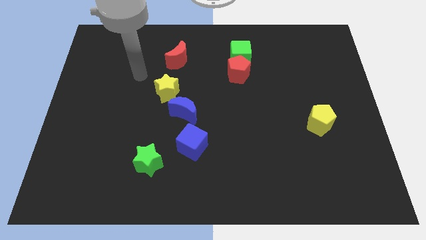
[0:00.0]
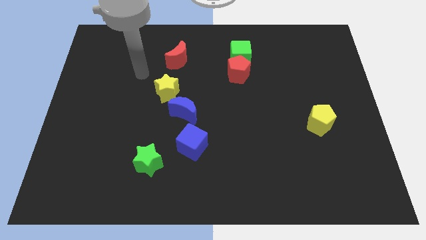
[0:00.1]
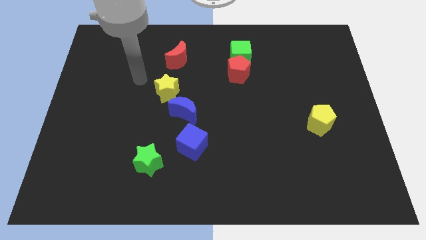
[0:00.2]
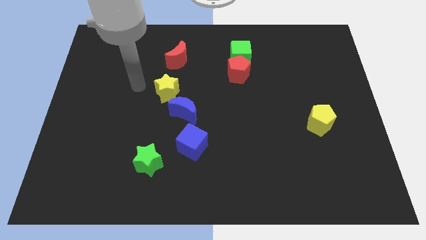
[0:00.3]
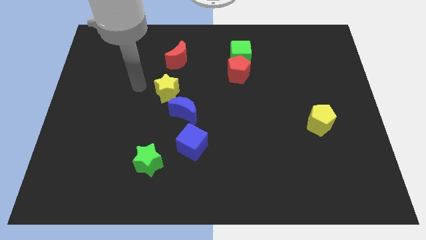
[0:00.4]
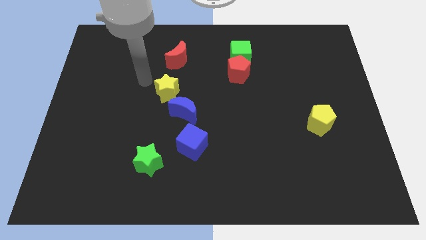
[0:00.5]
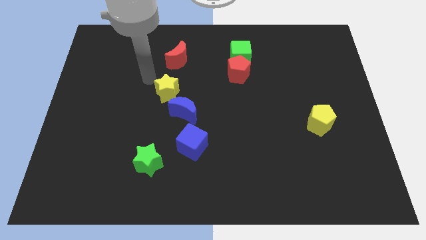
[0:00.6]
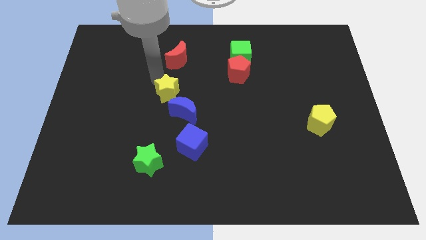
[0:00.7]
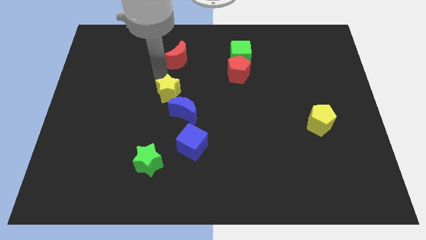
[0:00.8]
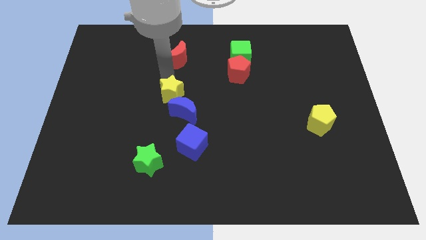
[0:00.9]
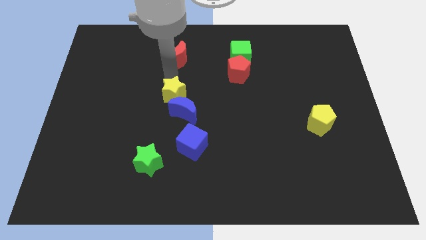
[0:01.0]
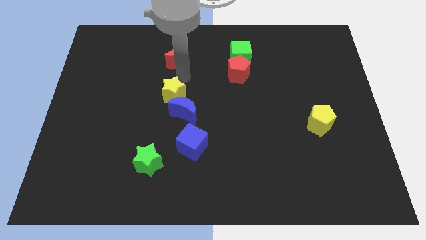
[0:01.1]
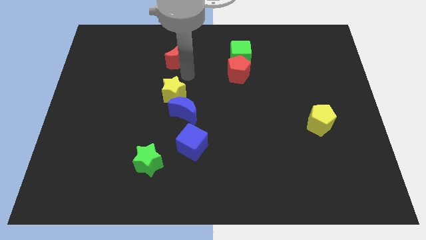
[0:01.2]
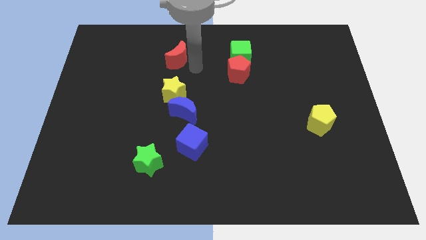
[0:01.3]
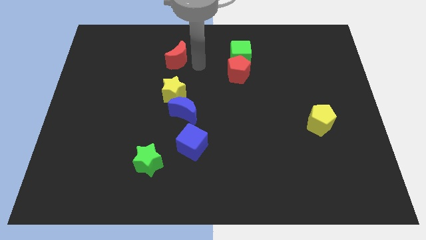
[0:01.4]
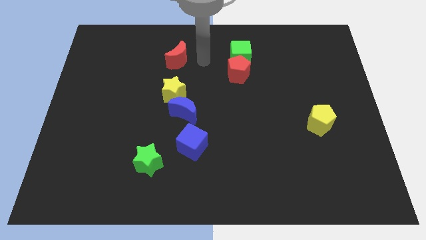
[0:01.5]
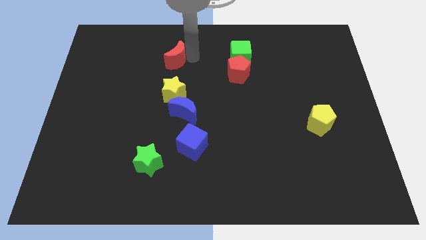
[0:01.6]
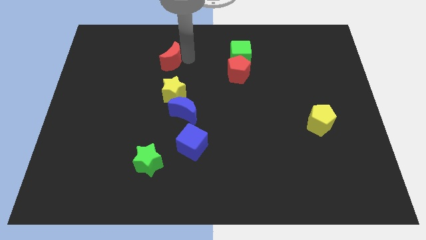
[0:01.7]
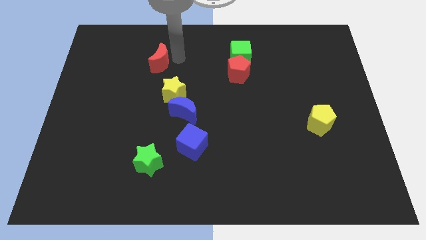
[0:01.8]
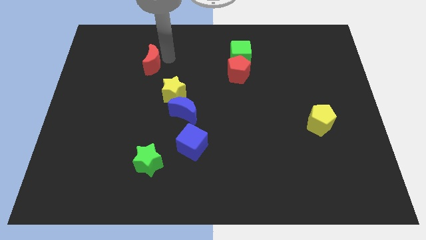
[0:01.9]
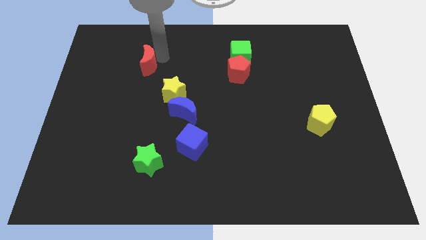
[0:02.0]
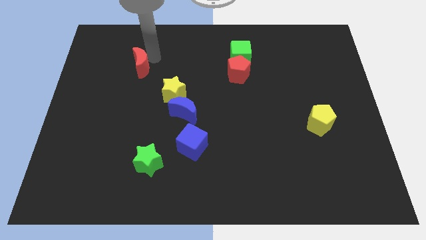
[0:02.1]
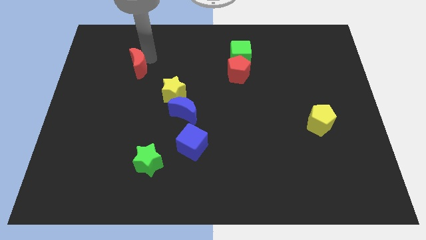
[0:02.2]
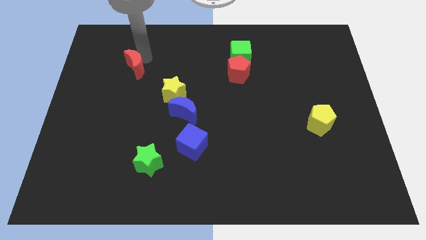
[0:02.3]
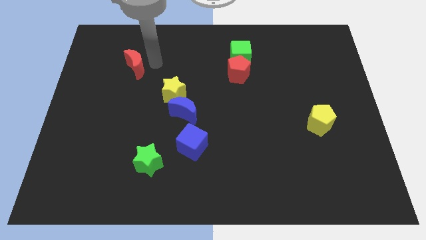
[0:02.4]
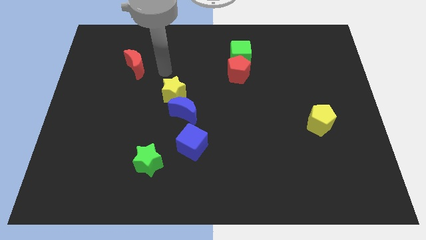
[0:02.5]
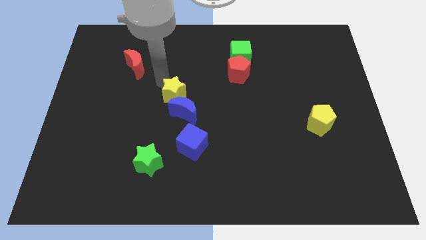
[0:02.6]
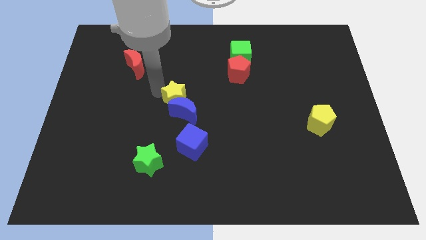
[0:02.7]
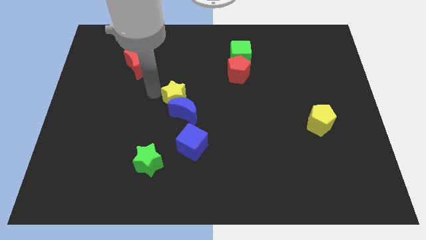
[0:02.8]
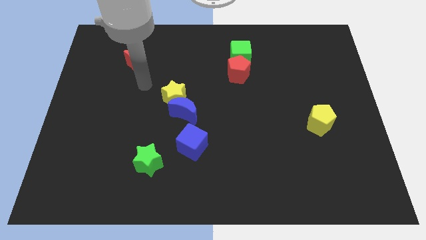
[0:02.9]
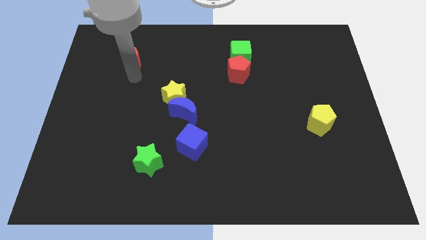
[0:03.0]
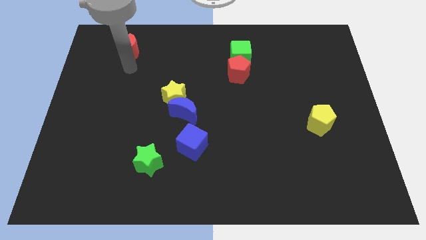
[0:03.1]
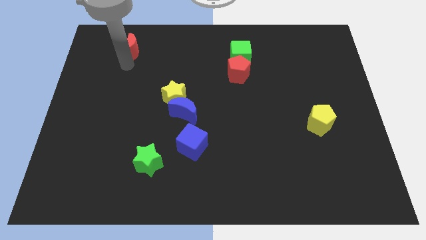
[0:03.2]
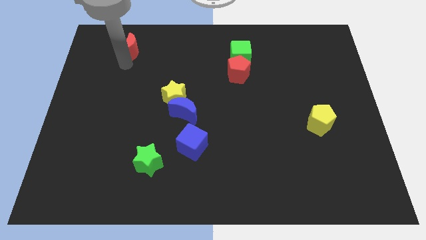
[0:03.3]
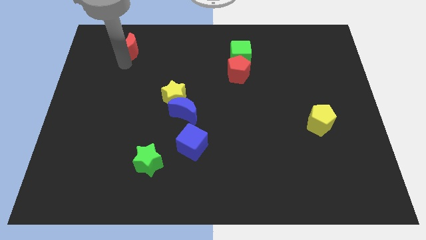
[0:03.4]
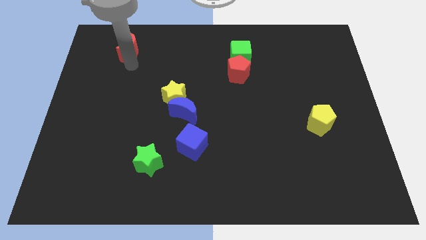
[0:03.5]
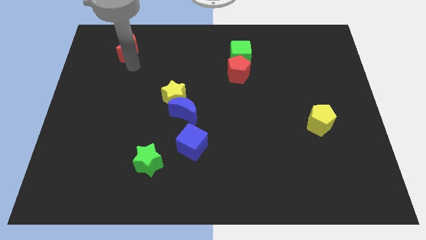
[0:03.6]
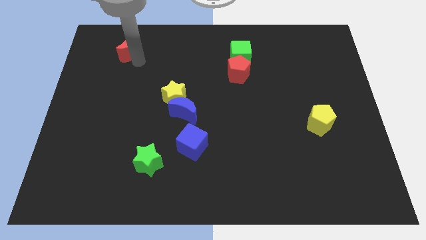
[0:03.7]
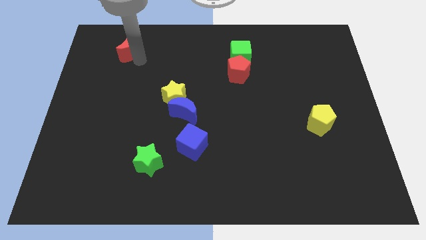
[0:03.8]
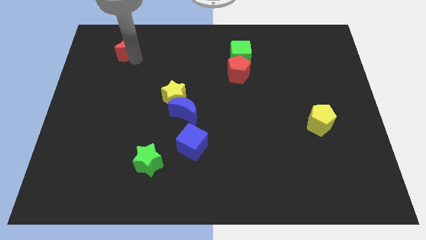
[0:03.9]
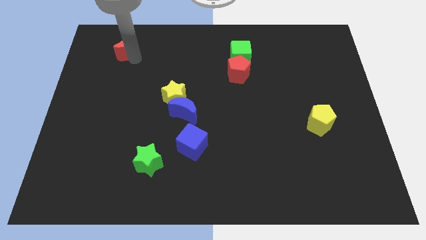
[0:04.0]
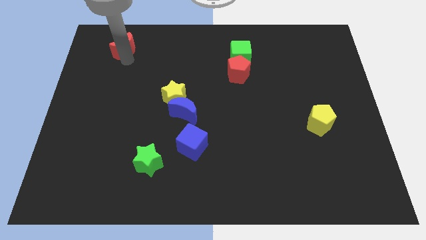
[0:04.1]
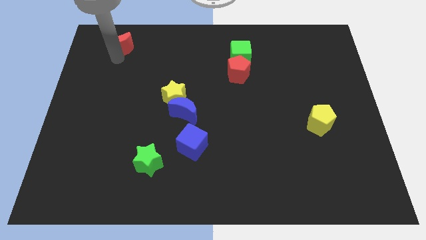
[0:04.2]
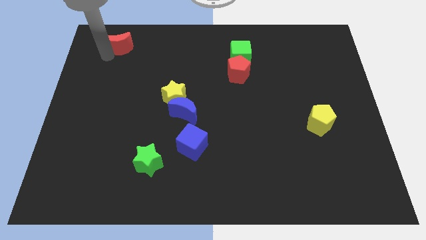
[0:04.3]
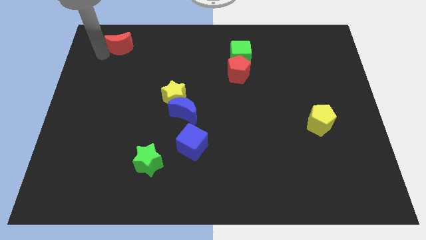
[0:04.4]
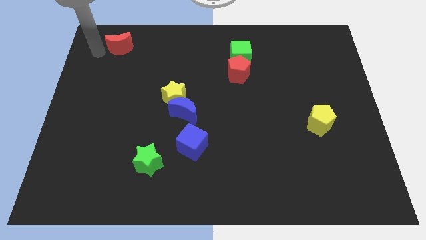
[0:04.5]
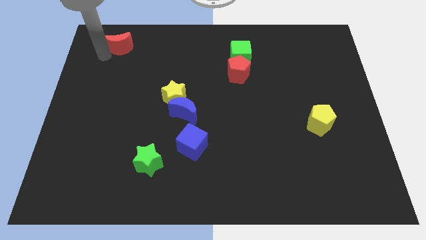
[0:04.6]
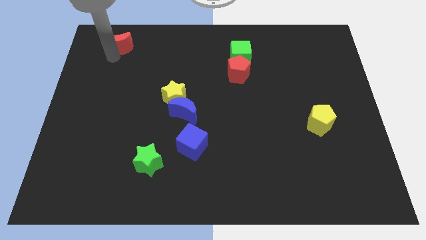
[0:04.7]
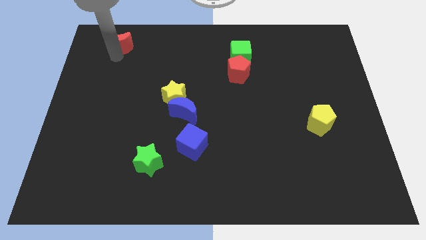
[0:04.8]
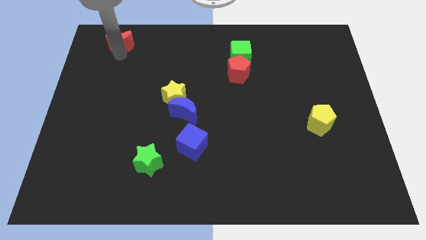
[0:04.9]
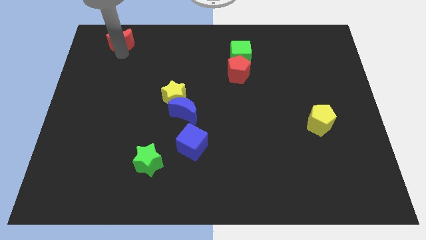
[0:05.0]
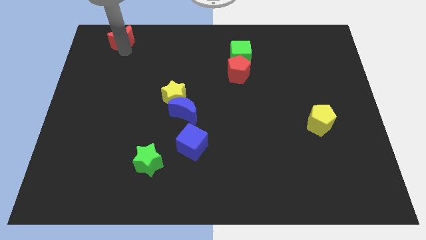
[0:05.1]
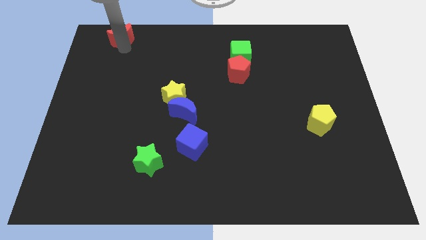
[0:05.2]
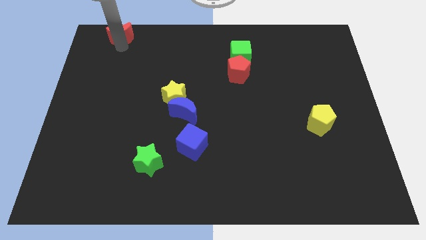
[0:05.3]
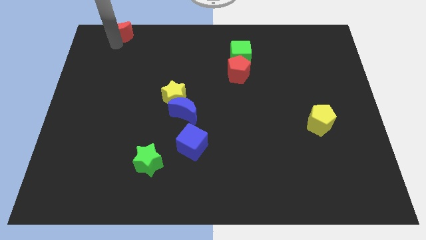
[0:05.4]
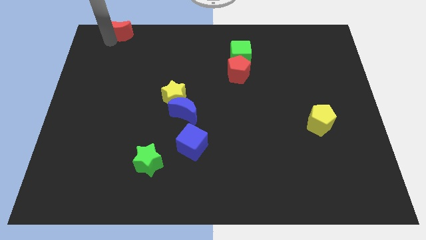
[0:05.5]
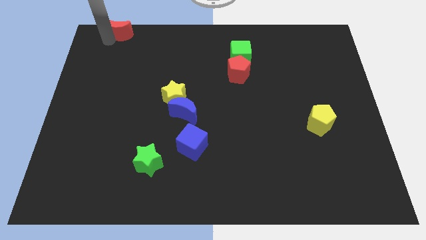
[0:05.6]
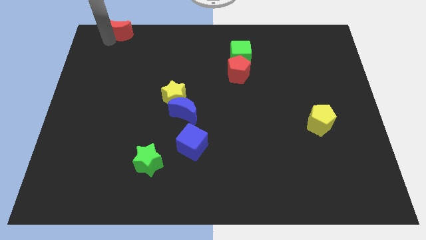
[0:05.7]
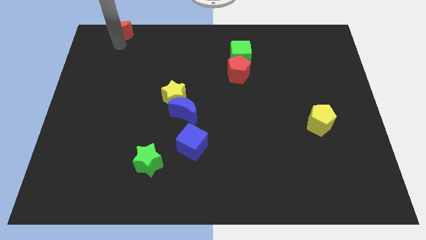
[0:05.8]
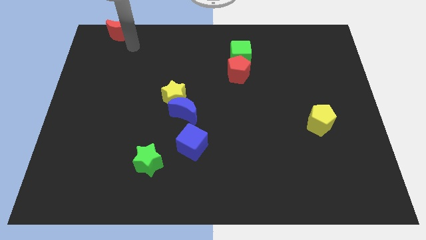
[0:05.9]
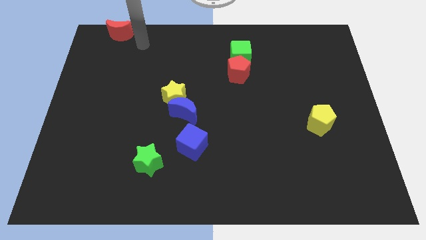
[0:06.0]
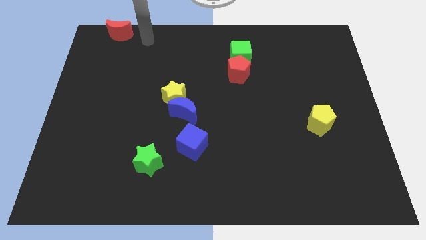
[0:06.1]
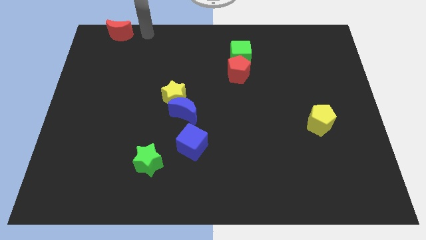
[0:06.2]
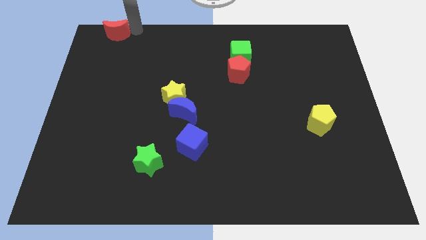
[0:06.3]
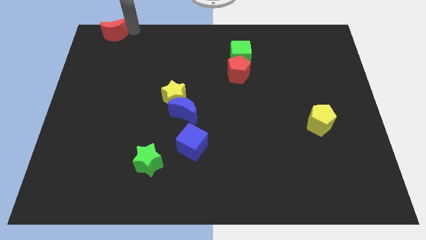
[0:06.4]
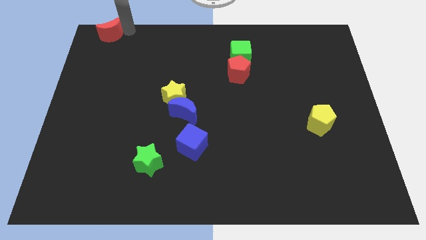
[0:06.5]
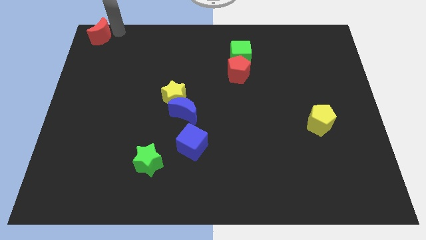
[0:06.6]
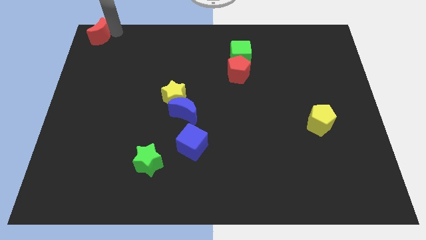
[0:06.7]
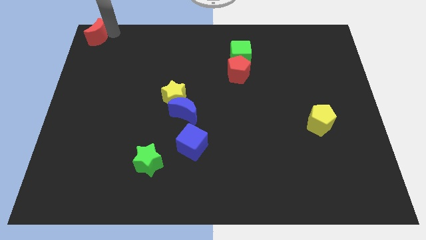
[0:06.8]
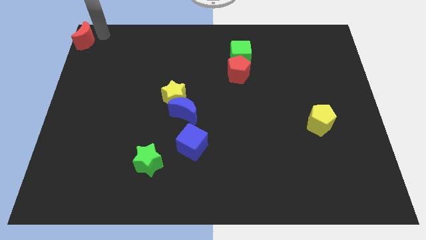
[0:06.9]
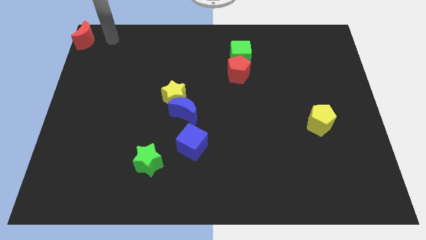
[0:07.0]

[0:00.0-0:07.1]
slide the red crescent towards the top left corner

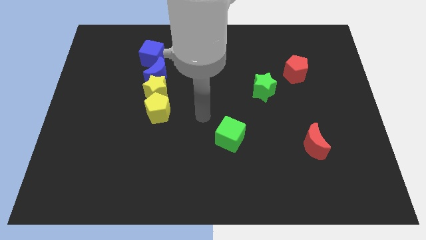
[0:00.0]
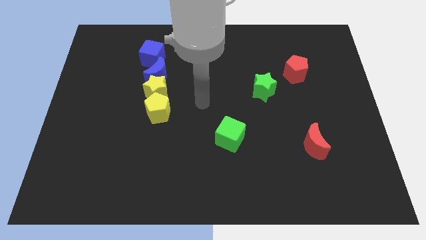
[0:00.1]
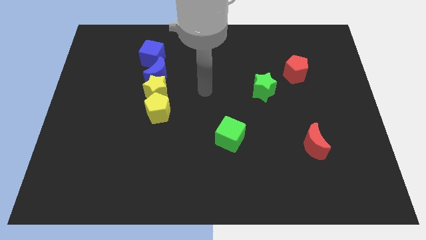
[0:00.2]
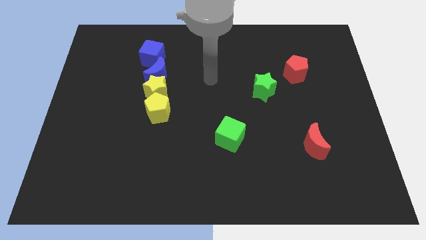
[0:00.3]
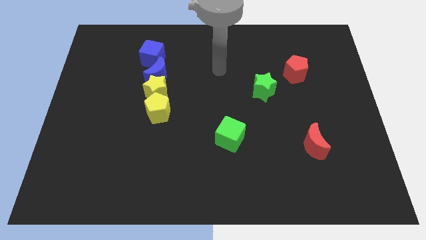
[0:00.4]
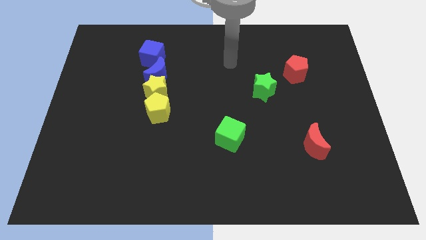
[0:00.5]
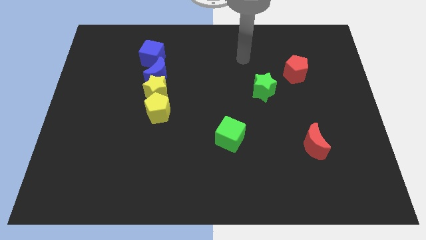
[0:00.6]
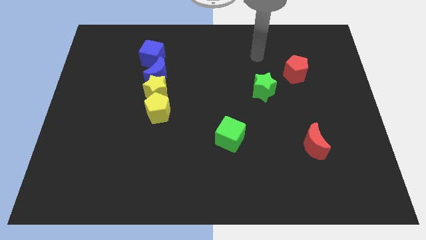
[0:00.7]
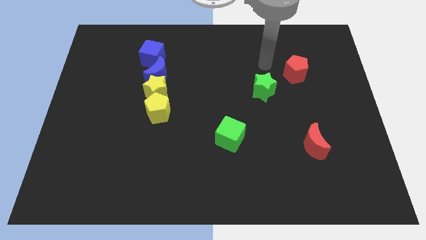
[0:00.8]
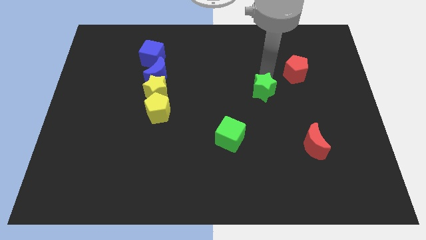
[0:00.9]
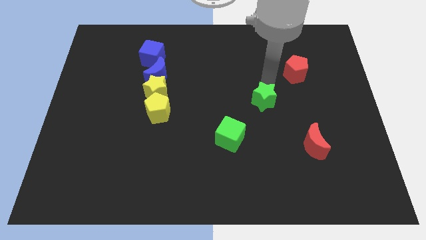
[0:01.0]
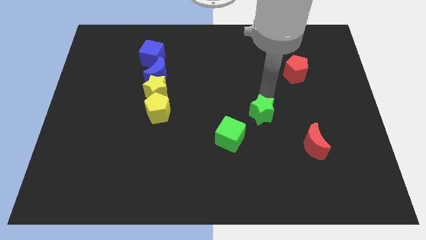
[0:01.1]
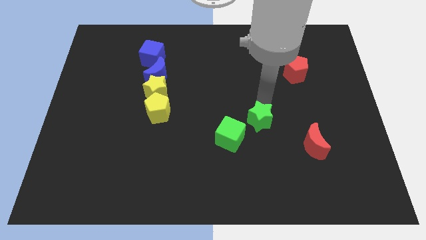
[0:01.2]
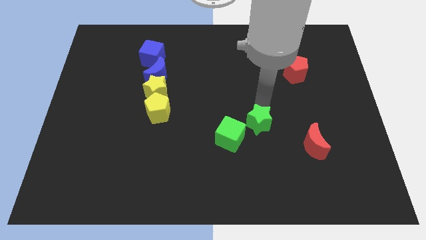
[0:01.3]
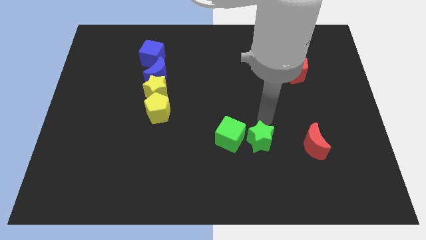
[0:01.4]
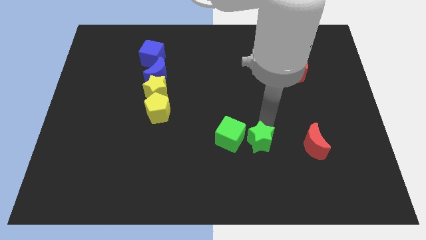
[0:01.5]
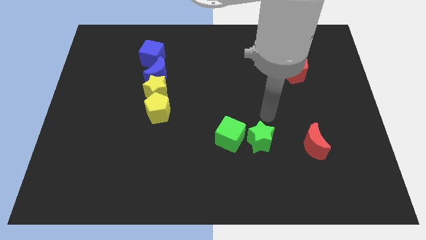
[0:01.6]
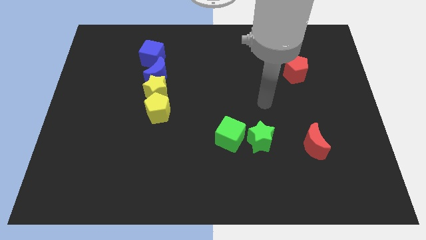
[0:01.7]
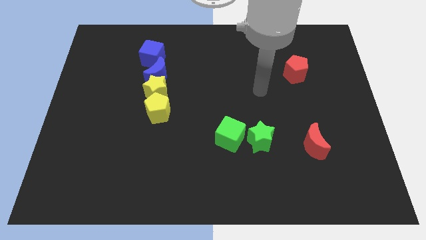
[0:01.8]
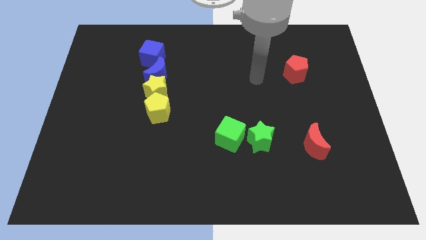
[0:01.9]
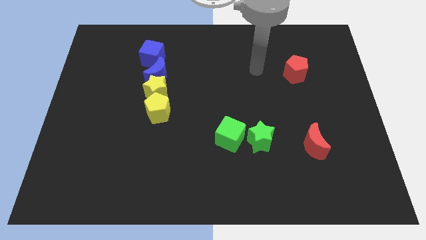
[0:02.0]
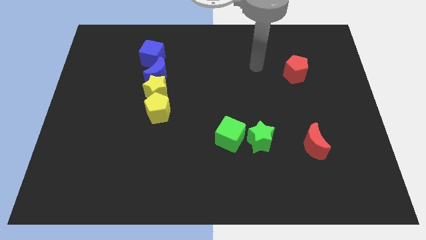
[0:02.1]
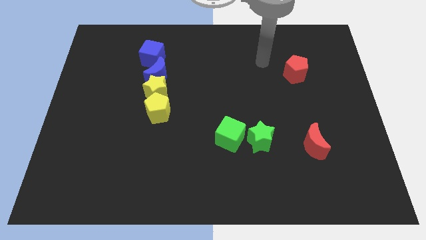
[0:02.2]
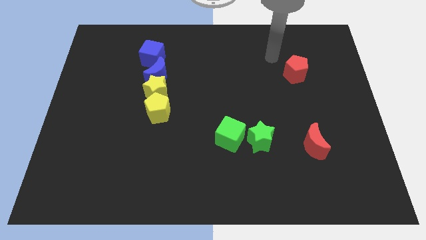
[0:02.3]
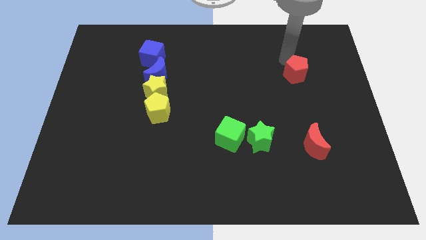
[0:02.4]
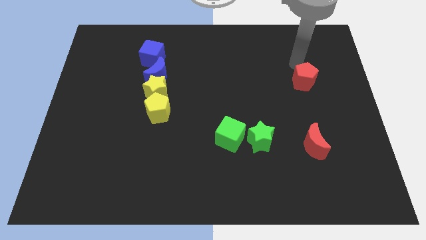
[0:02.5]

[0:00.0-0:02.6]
place the green star at right side of the green cube
